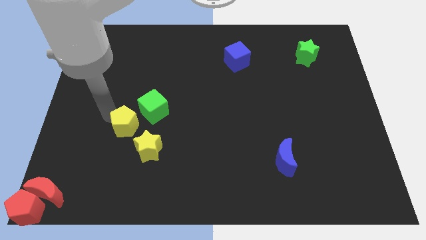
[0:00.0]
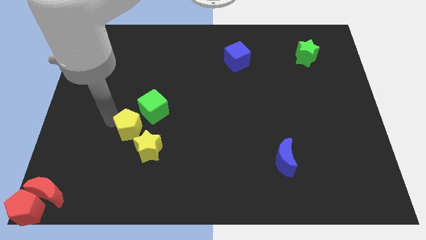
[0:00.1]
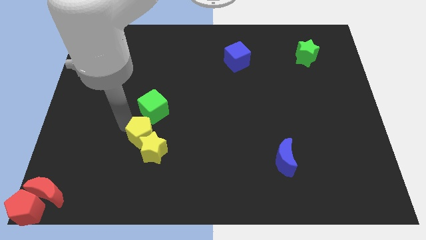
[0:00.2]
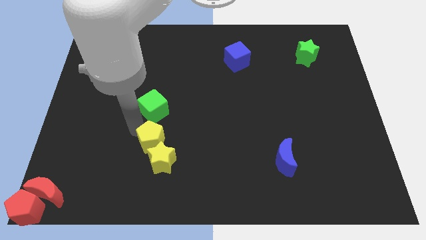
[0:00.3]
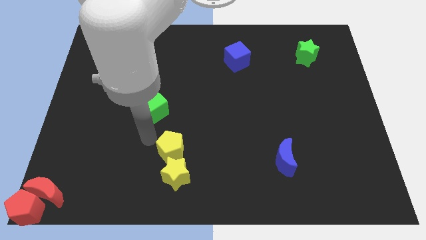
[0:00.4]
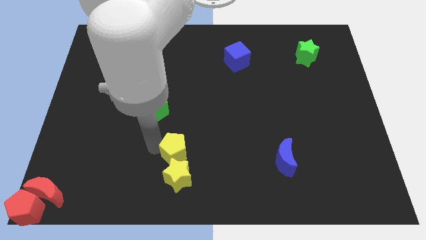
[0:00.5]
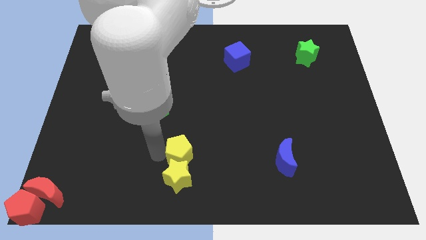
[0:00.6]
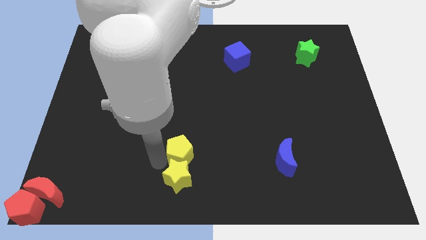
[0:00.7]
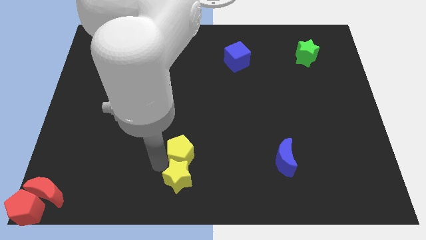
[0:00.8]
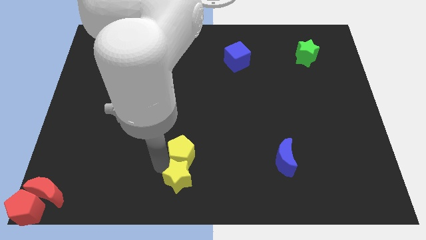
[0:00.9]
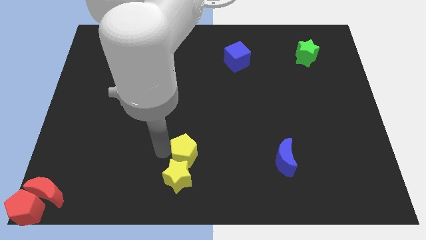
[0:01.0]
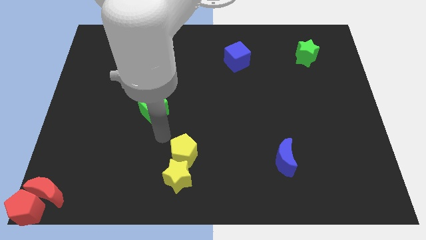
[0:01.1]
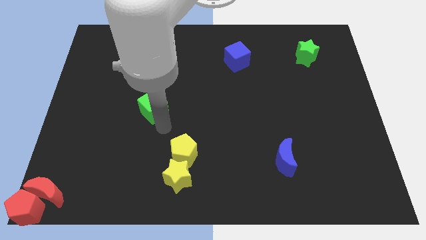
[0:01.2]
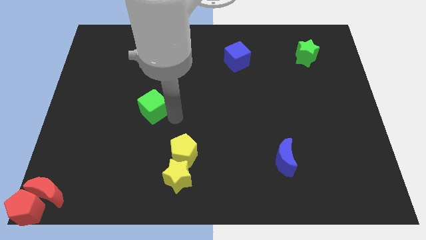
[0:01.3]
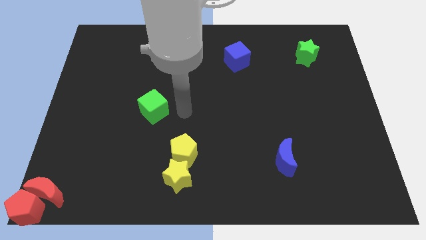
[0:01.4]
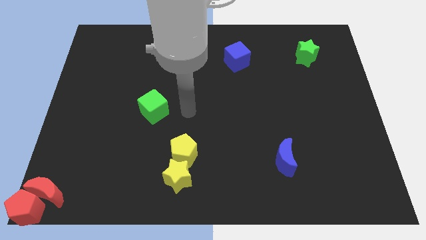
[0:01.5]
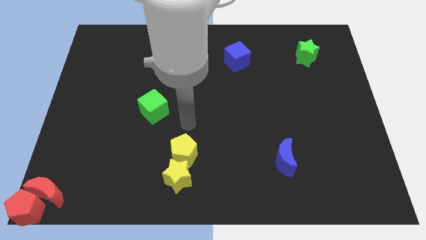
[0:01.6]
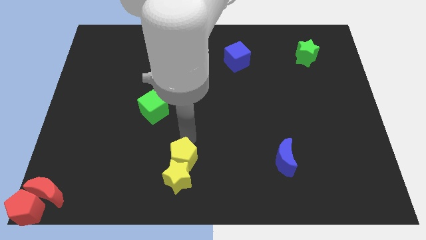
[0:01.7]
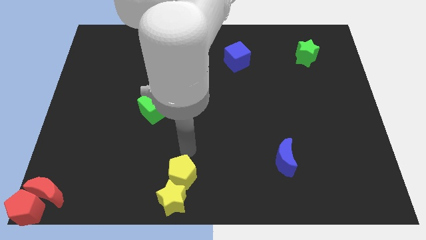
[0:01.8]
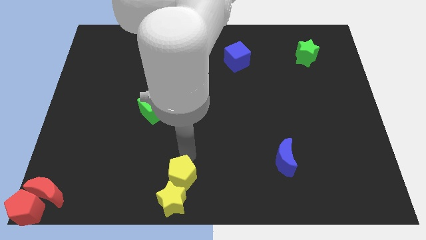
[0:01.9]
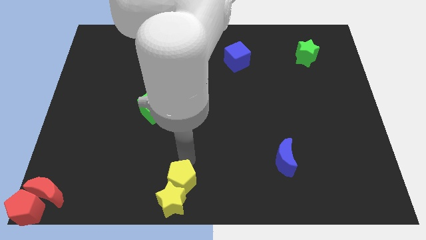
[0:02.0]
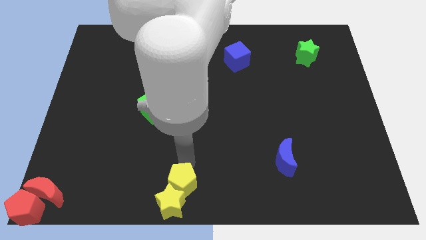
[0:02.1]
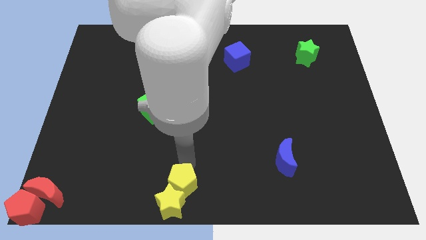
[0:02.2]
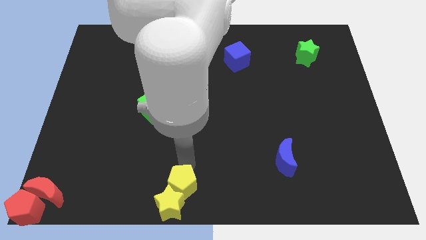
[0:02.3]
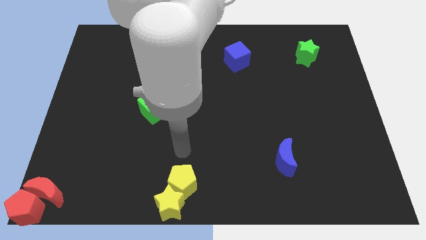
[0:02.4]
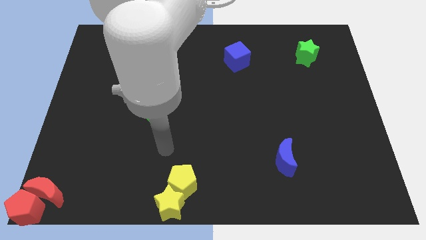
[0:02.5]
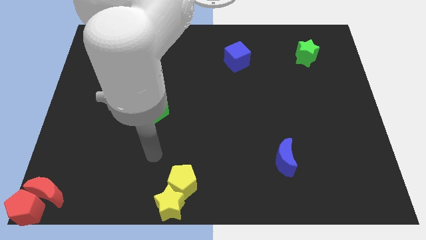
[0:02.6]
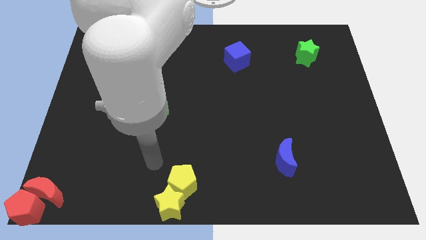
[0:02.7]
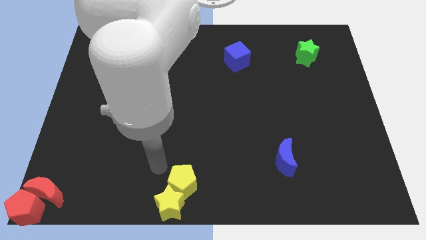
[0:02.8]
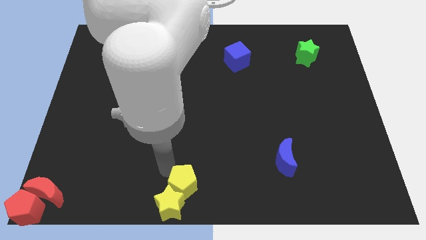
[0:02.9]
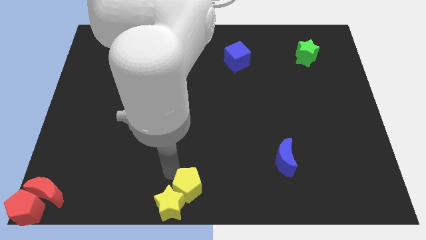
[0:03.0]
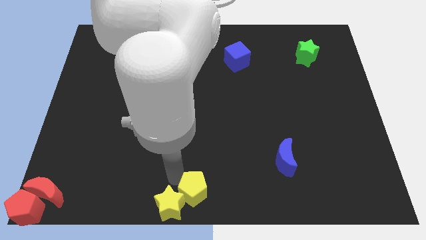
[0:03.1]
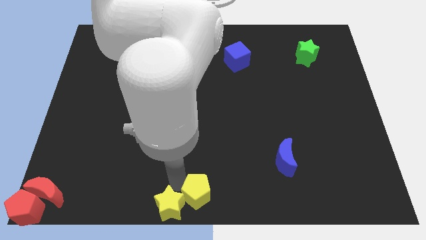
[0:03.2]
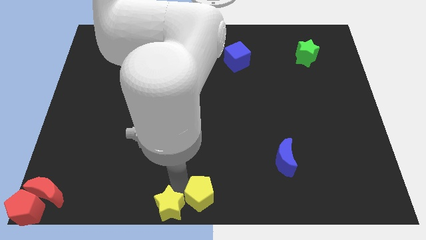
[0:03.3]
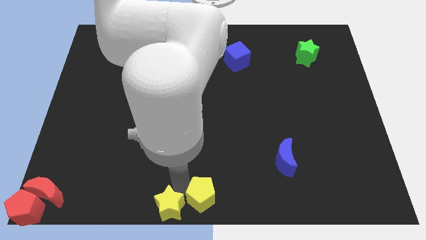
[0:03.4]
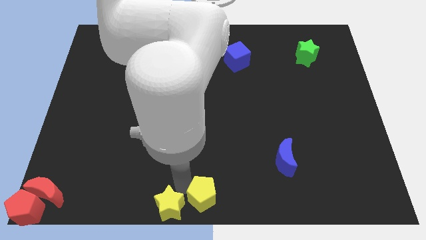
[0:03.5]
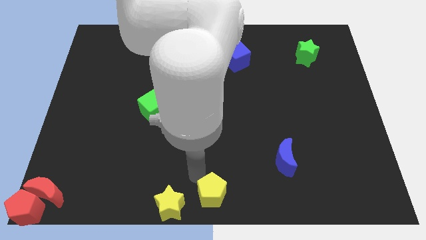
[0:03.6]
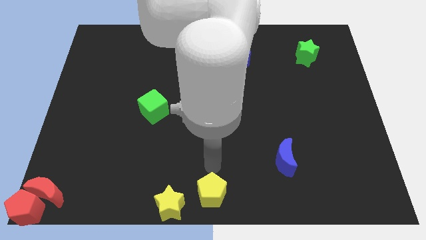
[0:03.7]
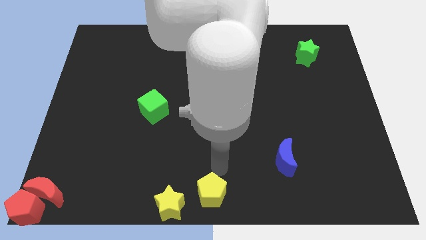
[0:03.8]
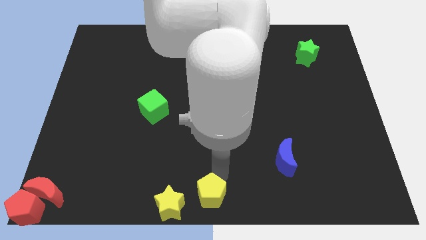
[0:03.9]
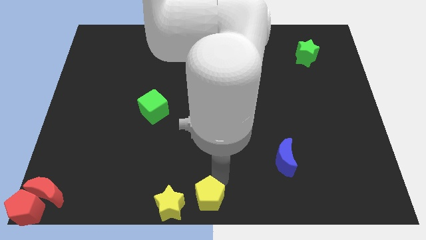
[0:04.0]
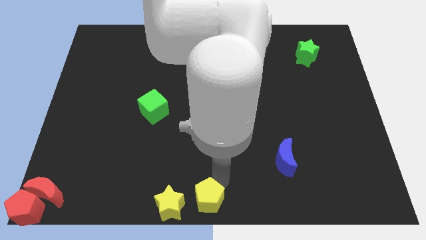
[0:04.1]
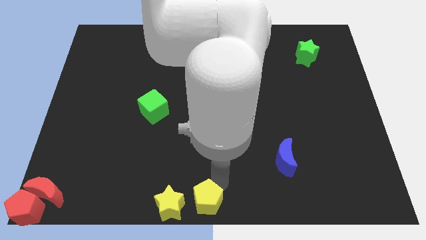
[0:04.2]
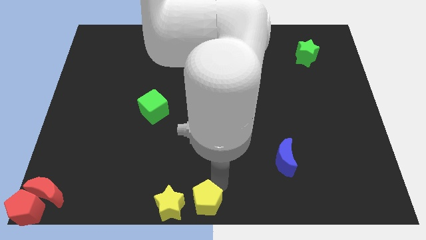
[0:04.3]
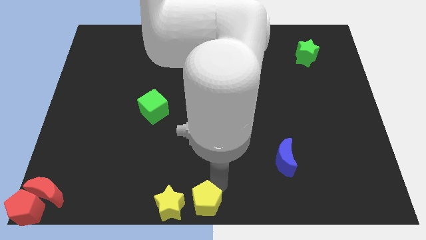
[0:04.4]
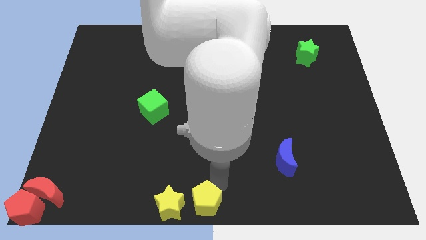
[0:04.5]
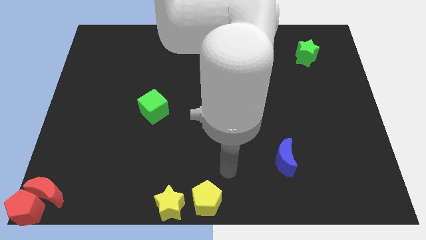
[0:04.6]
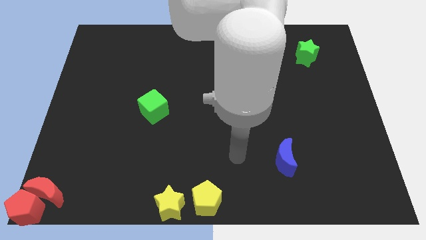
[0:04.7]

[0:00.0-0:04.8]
push the yellow pentagon to the bottom center

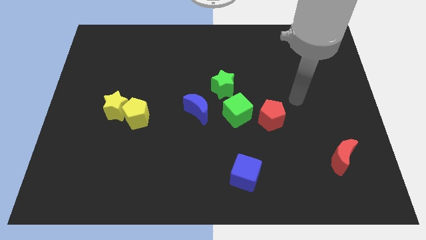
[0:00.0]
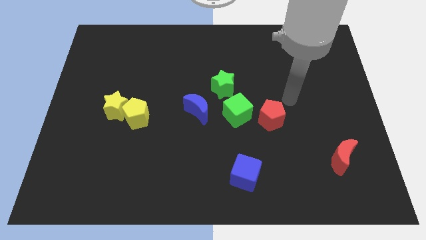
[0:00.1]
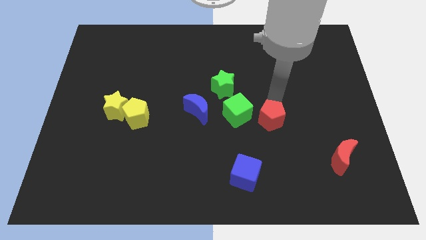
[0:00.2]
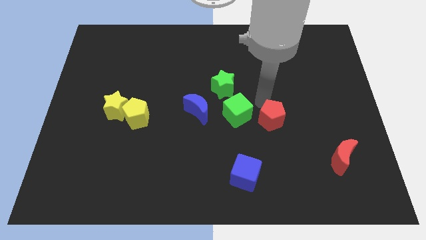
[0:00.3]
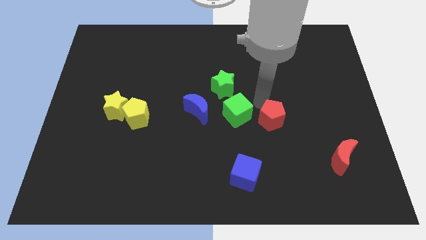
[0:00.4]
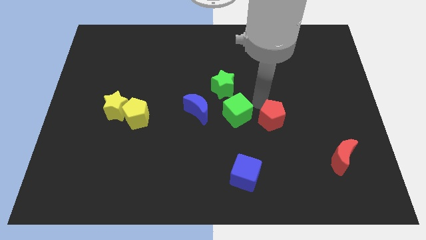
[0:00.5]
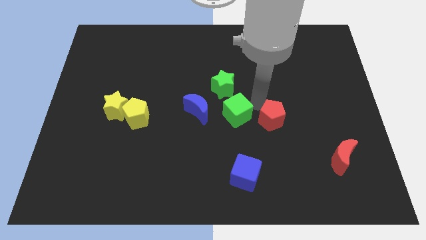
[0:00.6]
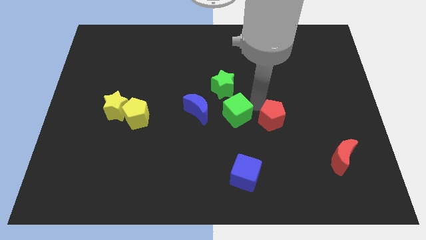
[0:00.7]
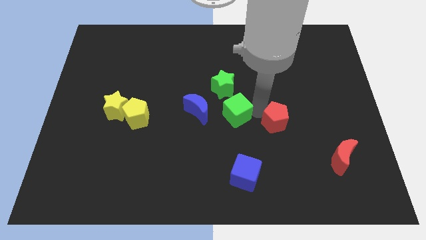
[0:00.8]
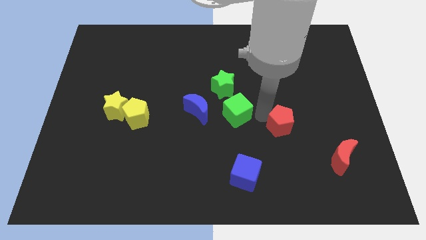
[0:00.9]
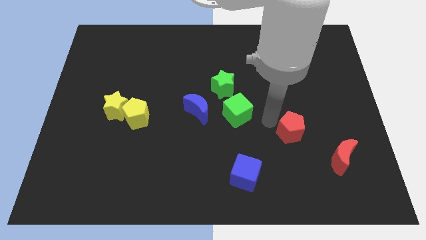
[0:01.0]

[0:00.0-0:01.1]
move red pentagon diagonally left to the red crescent

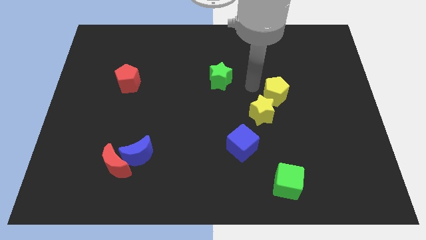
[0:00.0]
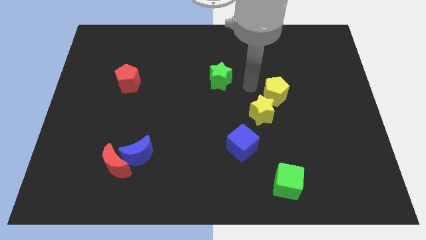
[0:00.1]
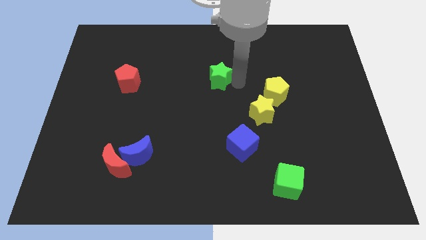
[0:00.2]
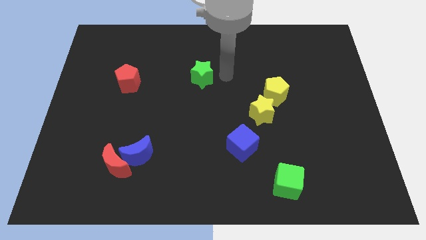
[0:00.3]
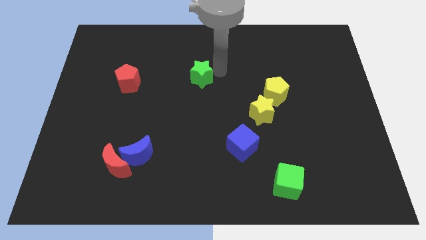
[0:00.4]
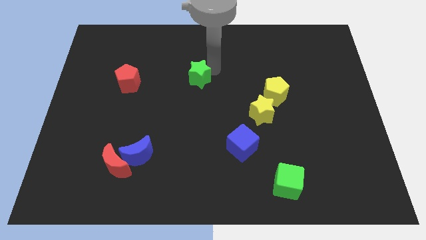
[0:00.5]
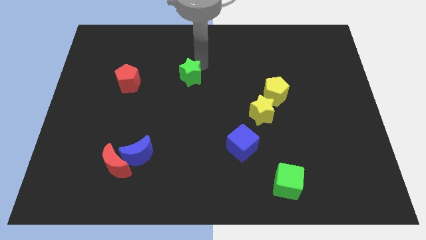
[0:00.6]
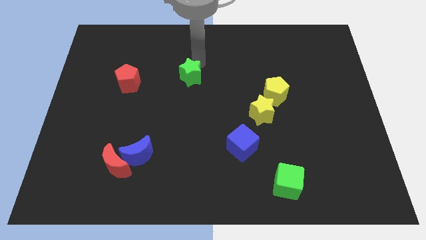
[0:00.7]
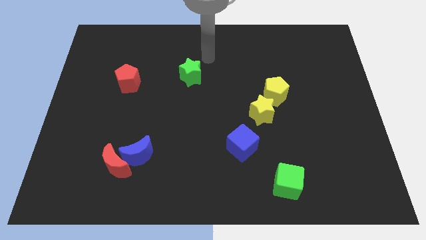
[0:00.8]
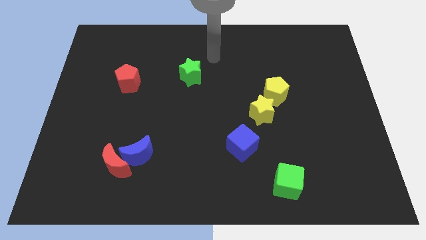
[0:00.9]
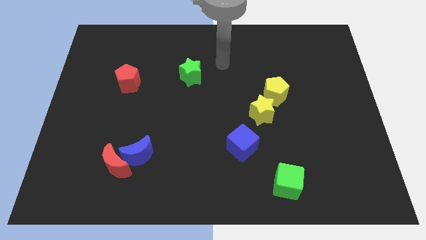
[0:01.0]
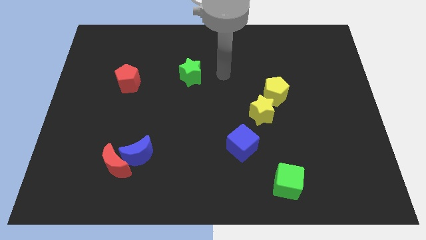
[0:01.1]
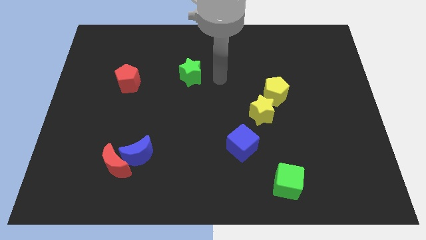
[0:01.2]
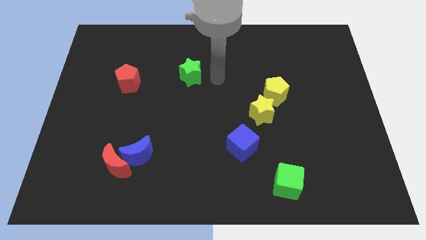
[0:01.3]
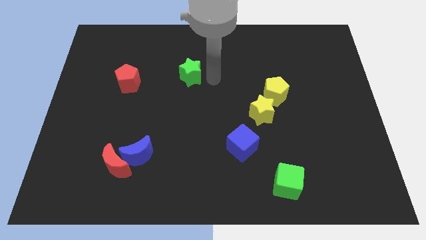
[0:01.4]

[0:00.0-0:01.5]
move the green star towards the red pentagon

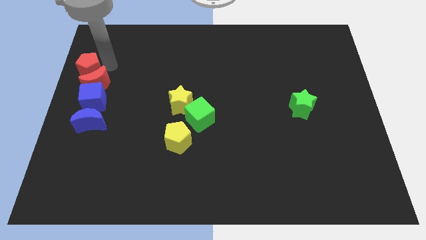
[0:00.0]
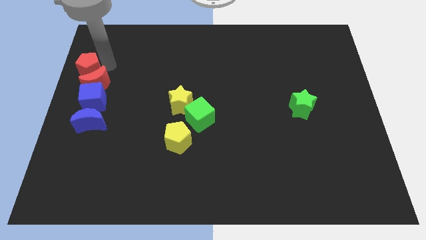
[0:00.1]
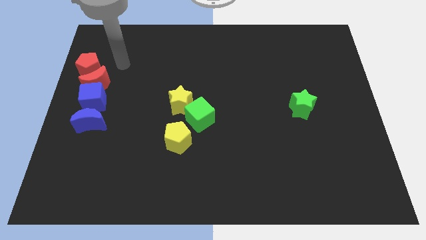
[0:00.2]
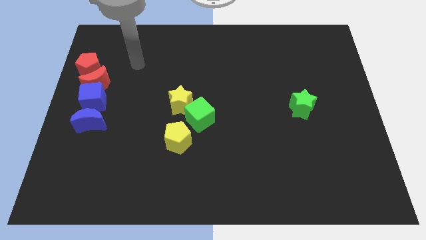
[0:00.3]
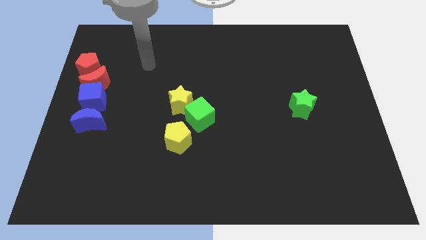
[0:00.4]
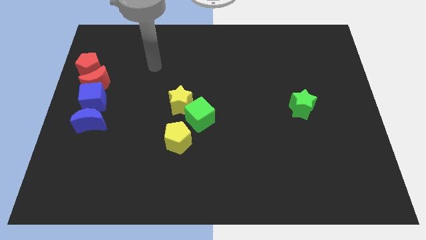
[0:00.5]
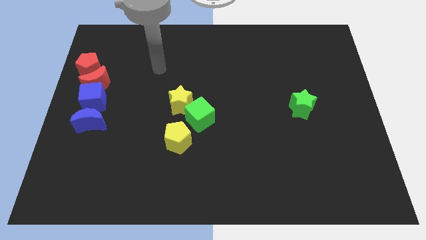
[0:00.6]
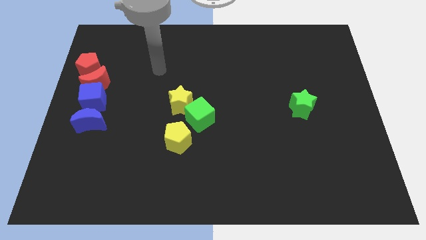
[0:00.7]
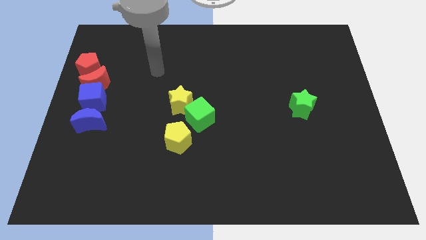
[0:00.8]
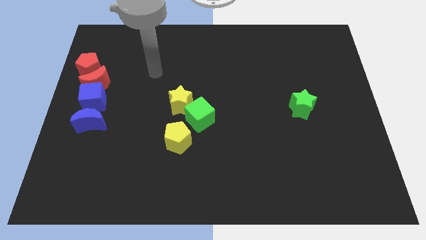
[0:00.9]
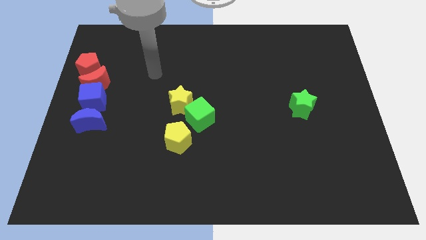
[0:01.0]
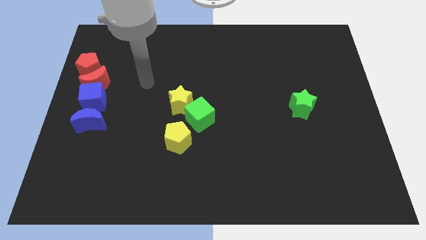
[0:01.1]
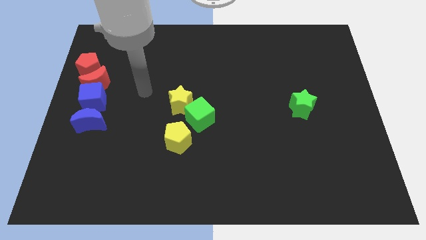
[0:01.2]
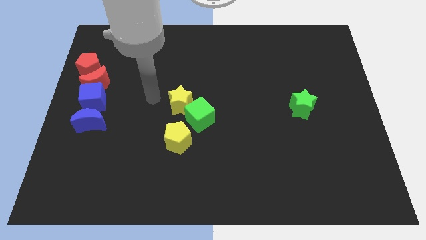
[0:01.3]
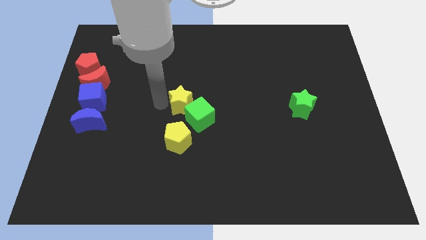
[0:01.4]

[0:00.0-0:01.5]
move your arm away from the pentagon

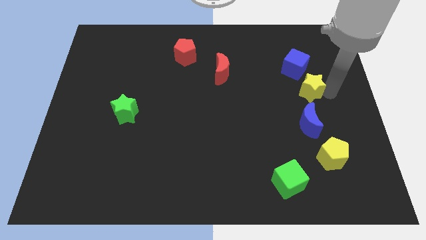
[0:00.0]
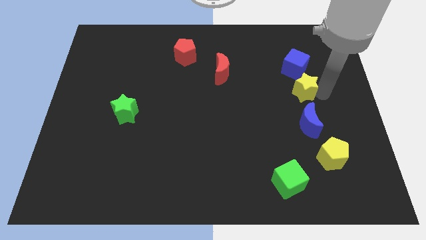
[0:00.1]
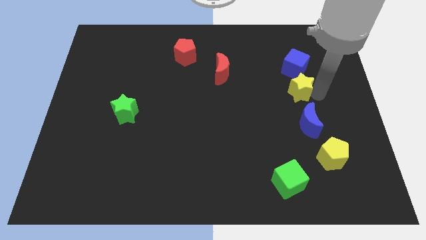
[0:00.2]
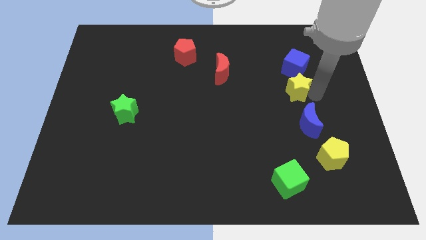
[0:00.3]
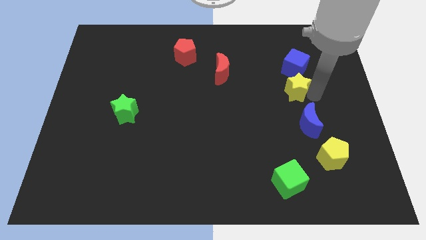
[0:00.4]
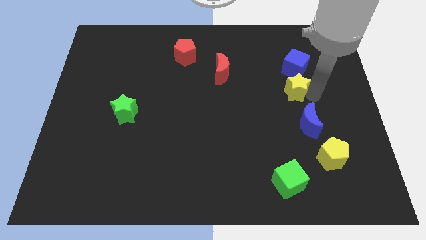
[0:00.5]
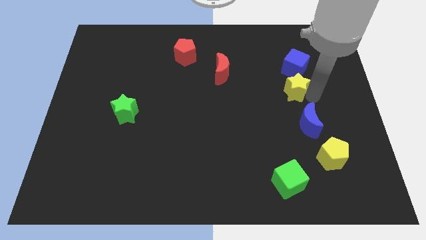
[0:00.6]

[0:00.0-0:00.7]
push yellow star below blue cube
